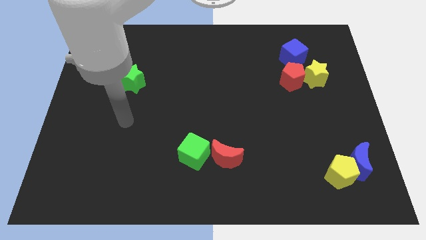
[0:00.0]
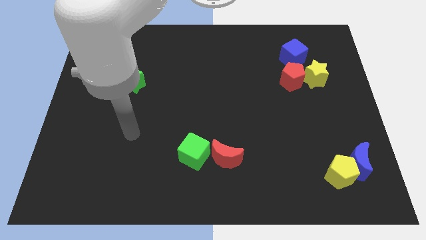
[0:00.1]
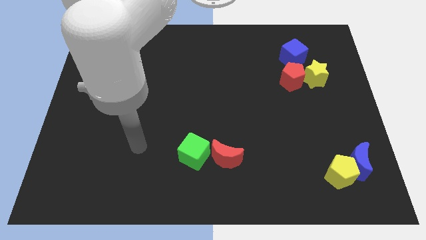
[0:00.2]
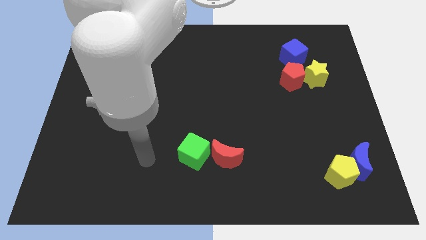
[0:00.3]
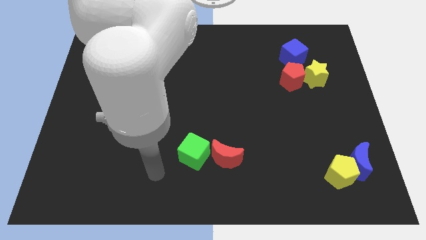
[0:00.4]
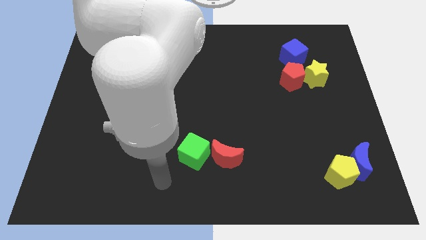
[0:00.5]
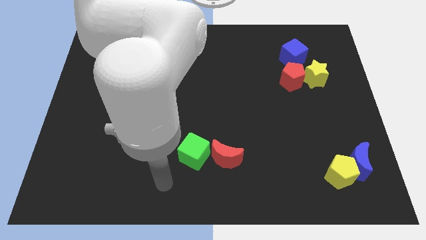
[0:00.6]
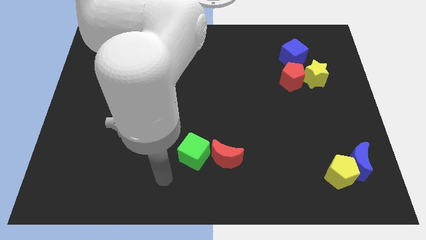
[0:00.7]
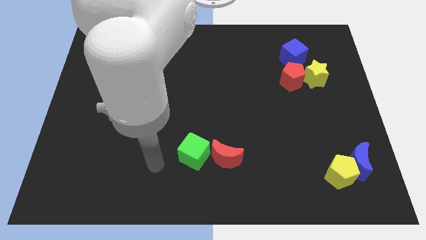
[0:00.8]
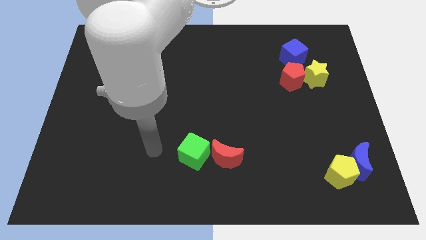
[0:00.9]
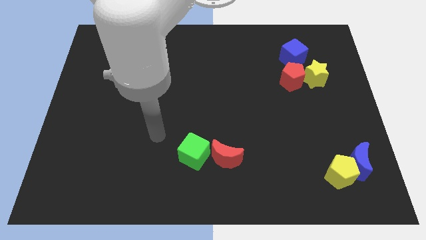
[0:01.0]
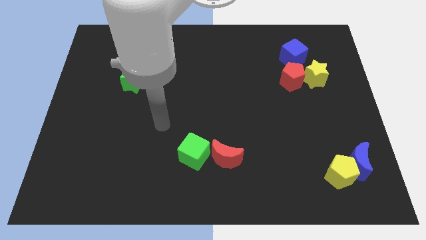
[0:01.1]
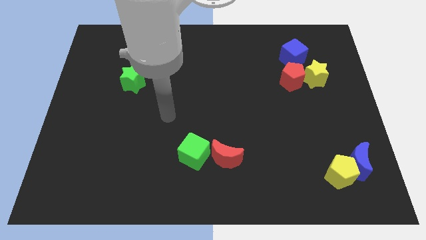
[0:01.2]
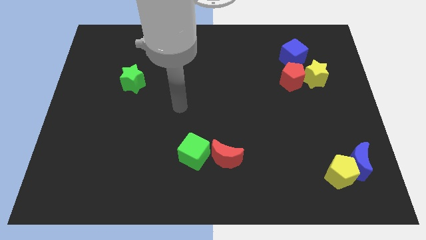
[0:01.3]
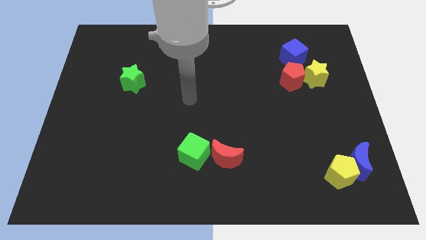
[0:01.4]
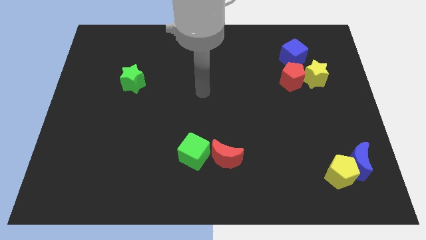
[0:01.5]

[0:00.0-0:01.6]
move your hand vertically above the green cube

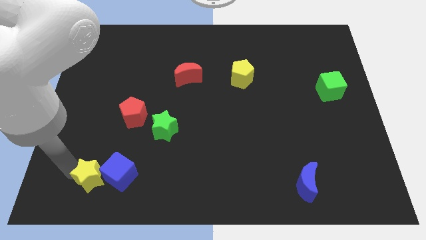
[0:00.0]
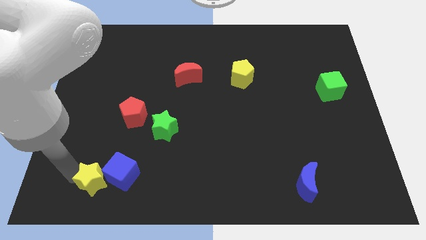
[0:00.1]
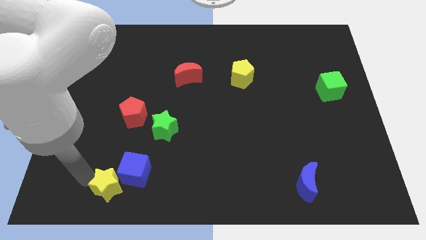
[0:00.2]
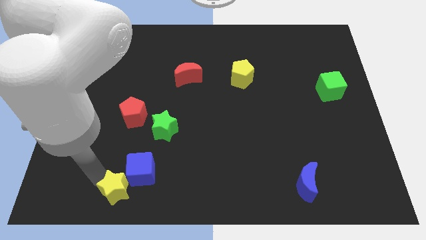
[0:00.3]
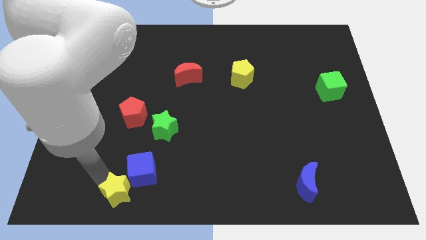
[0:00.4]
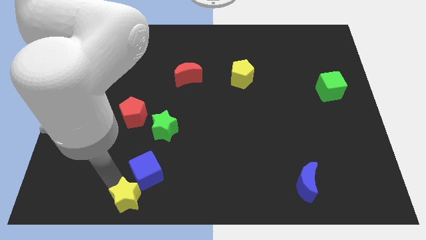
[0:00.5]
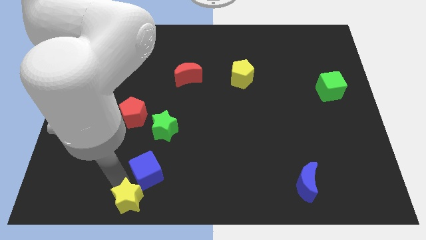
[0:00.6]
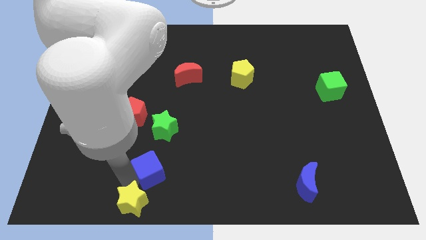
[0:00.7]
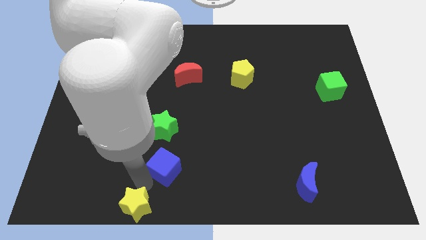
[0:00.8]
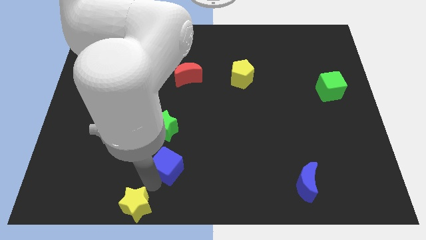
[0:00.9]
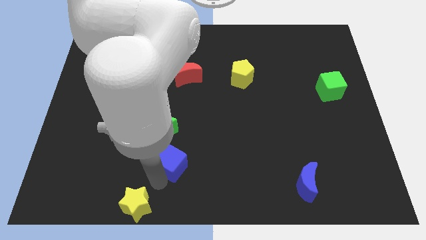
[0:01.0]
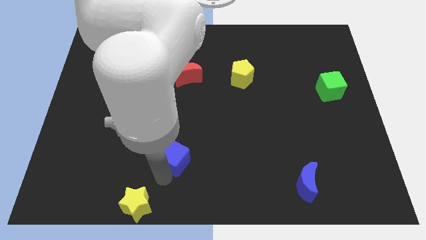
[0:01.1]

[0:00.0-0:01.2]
separate the blue cube from the yellow star

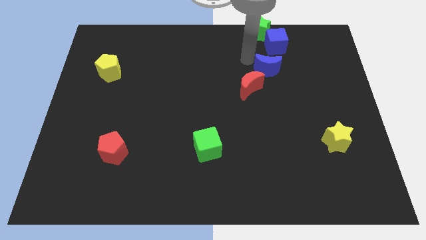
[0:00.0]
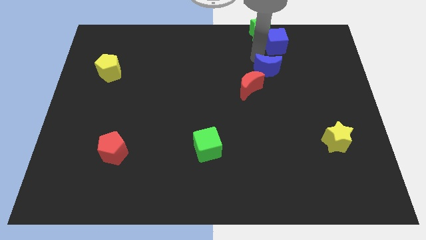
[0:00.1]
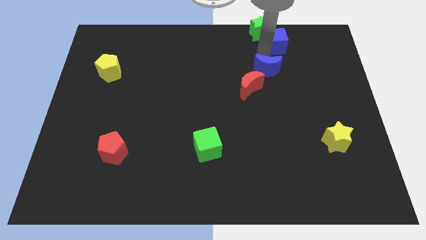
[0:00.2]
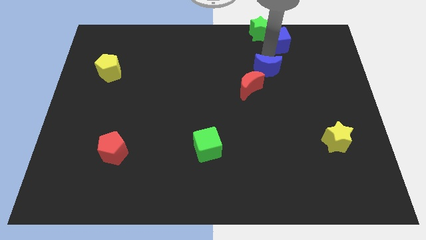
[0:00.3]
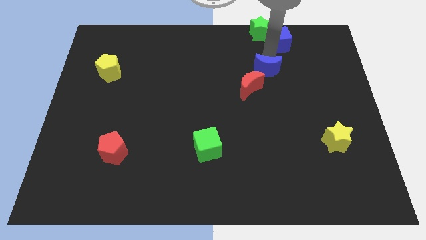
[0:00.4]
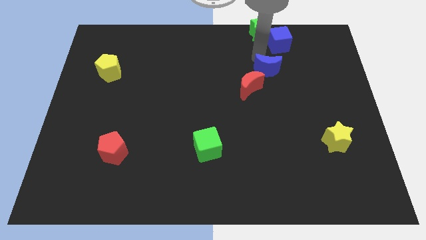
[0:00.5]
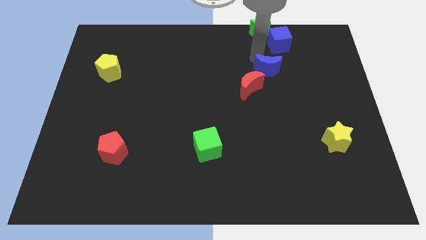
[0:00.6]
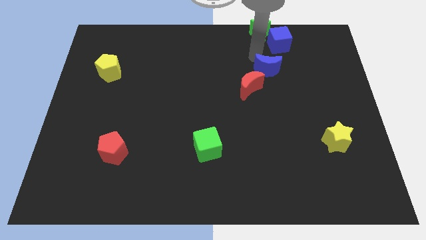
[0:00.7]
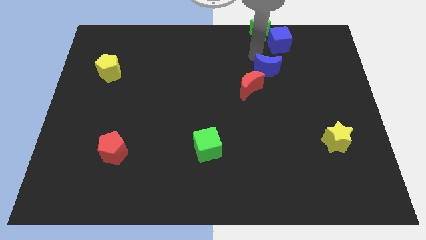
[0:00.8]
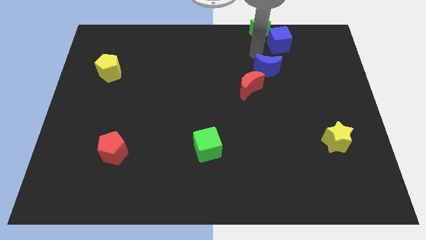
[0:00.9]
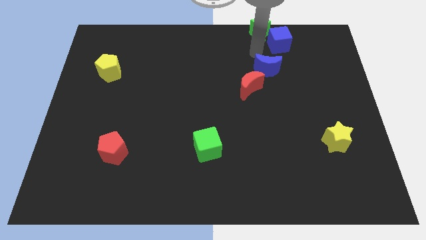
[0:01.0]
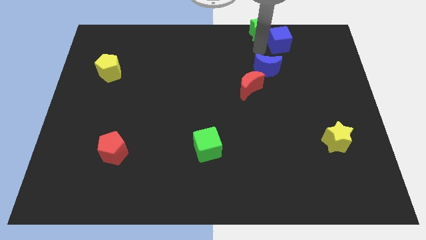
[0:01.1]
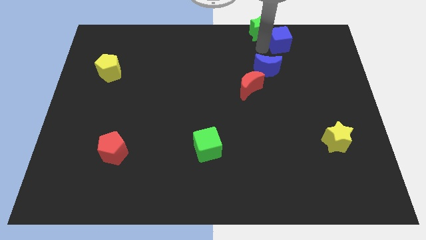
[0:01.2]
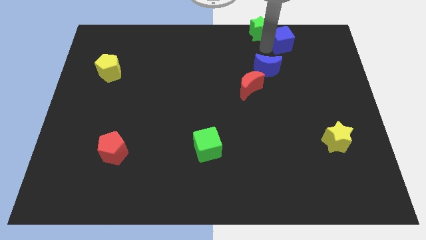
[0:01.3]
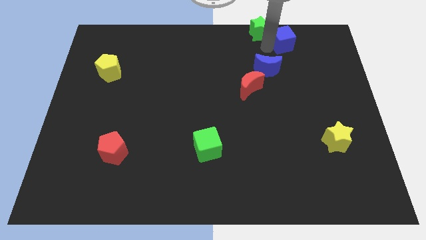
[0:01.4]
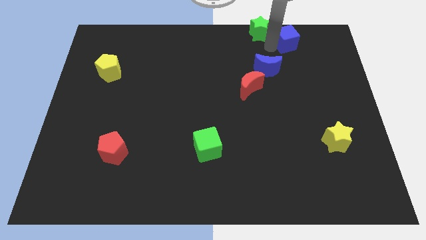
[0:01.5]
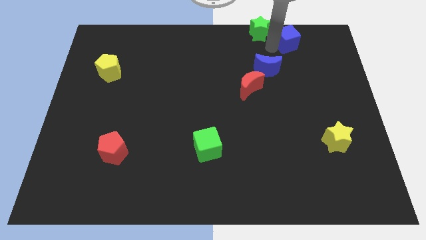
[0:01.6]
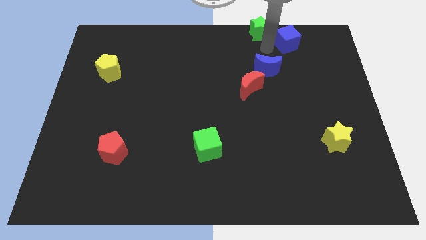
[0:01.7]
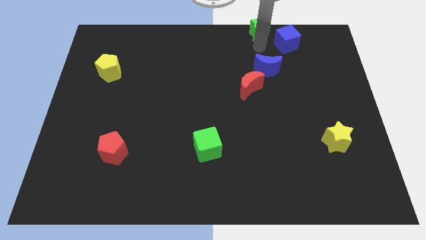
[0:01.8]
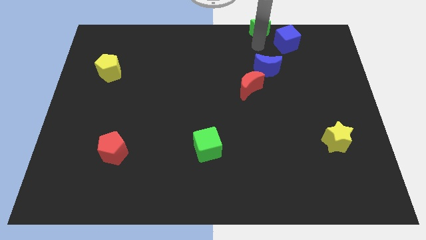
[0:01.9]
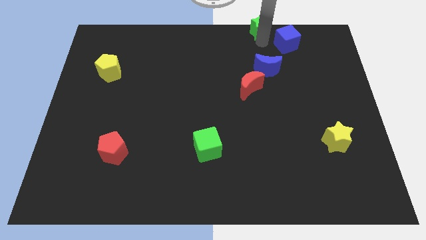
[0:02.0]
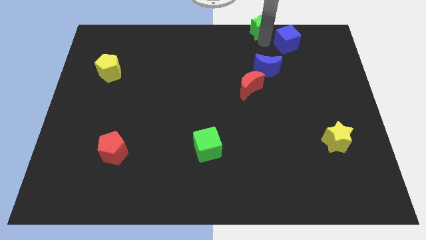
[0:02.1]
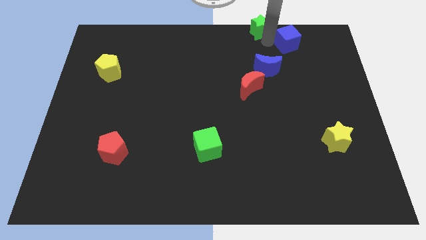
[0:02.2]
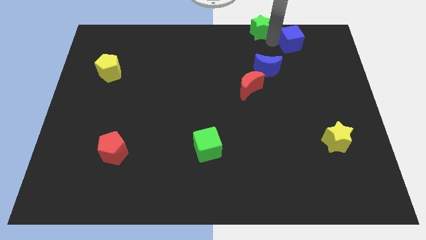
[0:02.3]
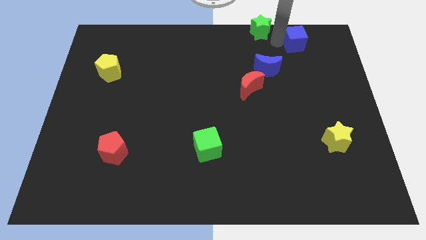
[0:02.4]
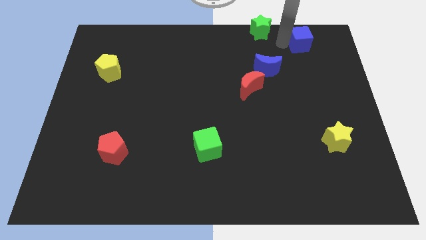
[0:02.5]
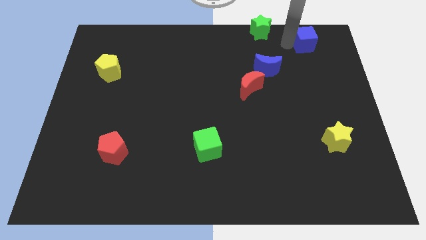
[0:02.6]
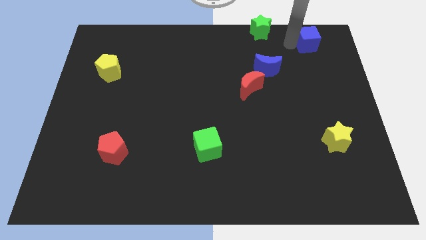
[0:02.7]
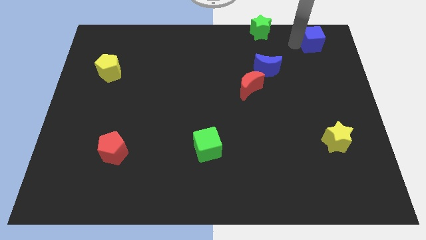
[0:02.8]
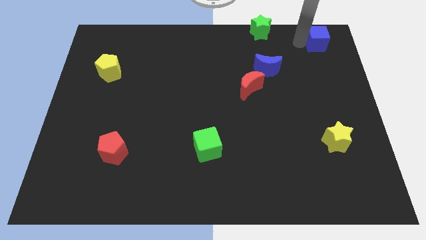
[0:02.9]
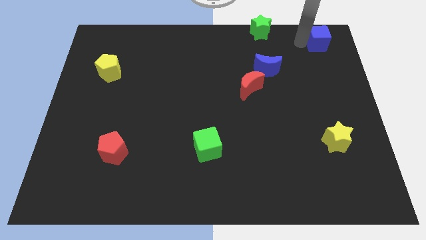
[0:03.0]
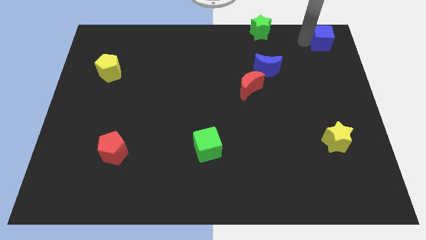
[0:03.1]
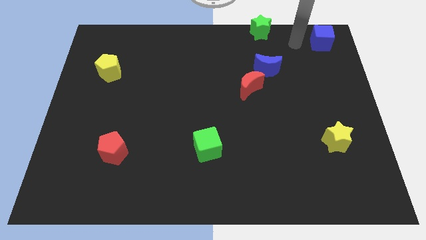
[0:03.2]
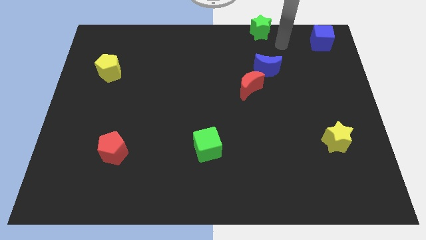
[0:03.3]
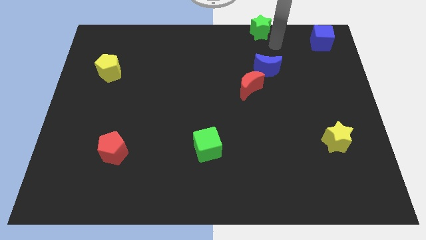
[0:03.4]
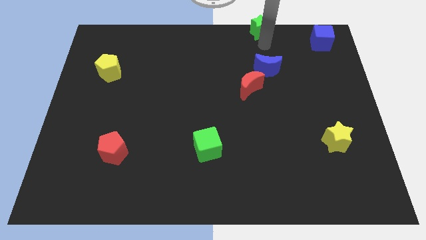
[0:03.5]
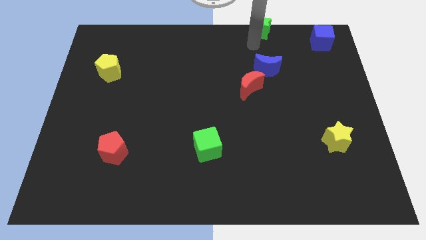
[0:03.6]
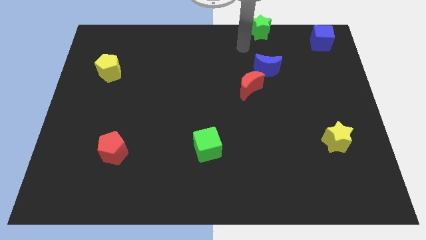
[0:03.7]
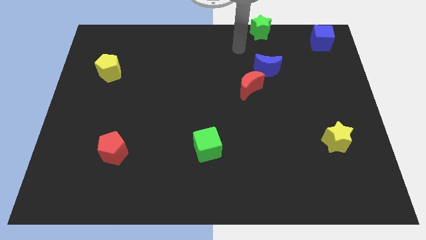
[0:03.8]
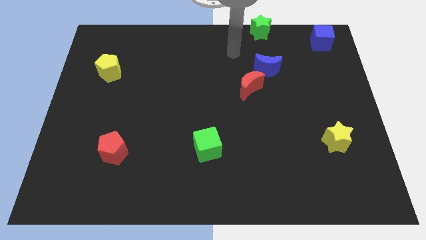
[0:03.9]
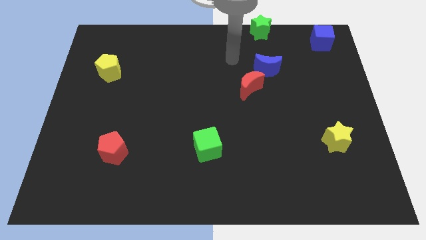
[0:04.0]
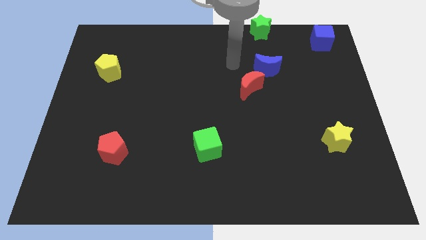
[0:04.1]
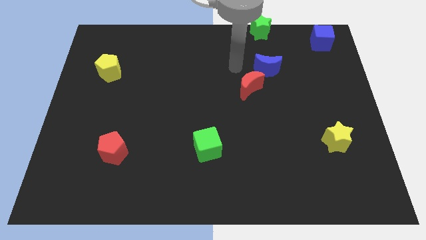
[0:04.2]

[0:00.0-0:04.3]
move the blue cube towards the top right corner of the board

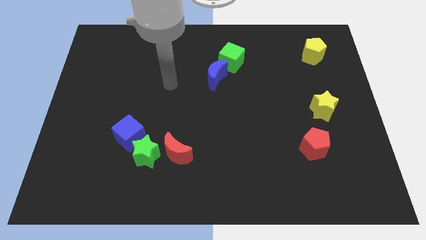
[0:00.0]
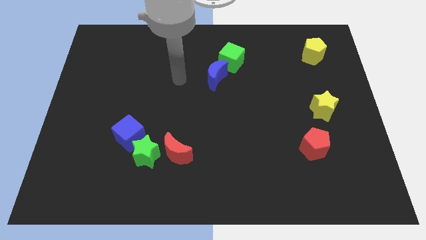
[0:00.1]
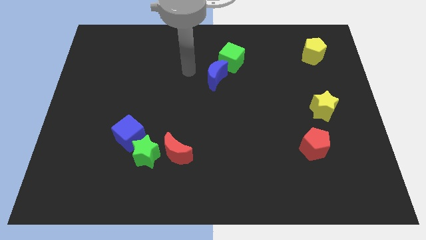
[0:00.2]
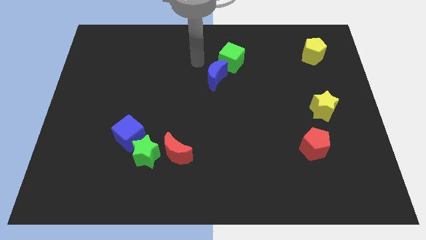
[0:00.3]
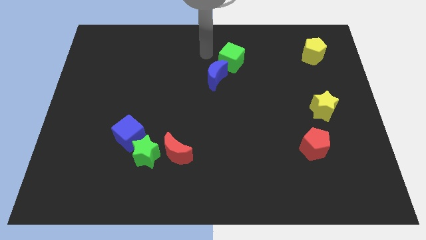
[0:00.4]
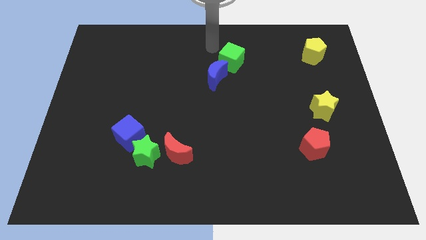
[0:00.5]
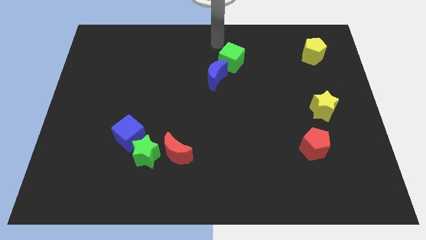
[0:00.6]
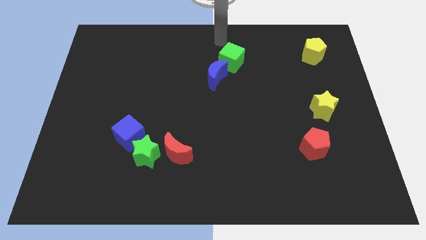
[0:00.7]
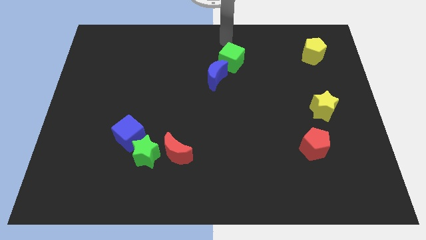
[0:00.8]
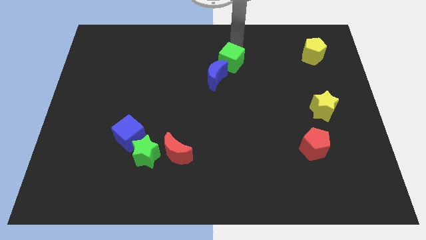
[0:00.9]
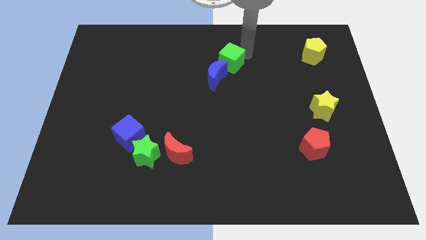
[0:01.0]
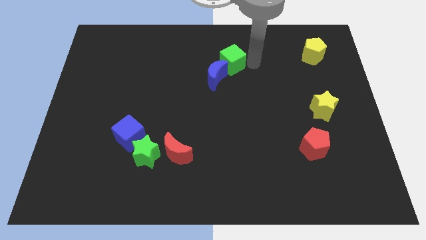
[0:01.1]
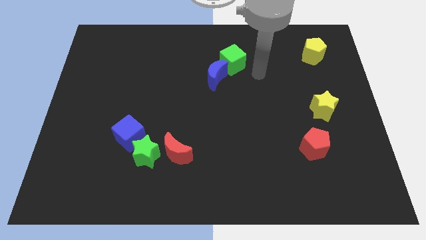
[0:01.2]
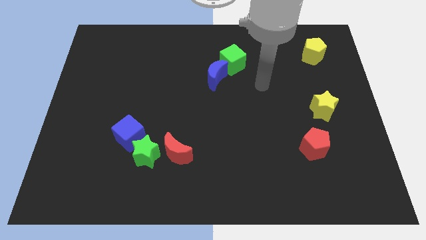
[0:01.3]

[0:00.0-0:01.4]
go and slightly push the green cube downwards

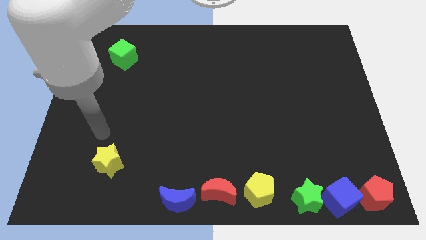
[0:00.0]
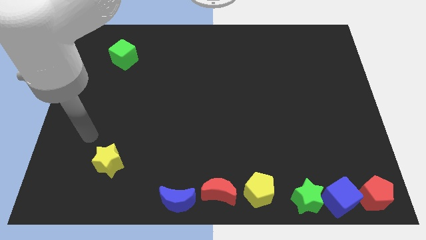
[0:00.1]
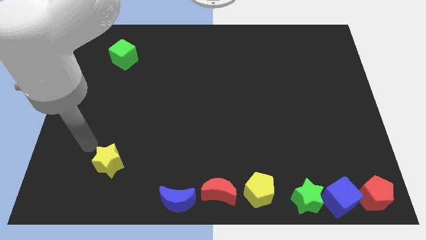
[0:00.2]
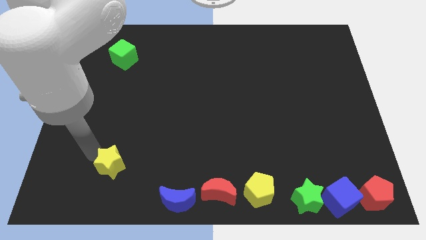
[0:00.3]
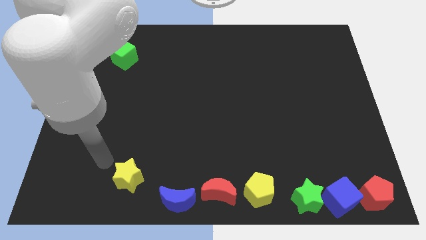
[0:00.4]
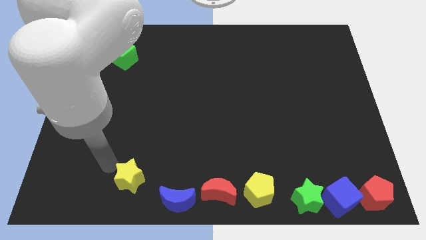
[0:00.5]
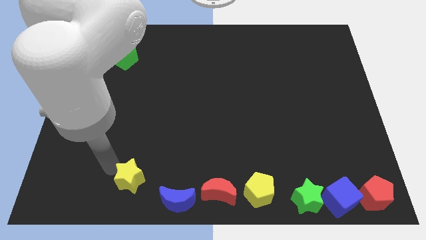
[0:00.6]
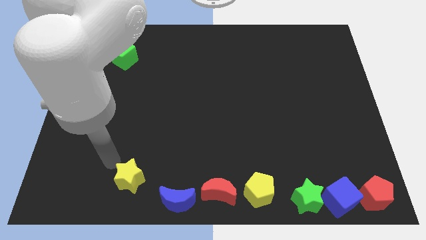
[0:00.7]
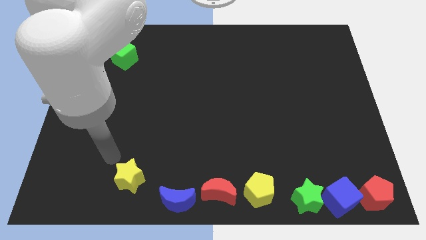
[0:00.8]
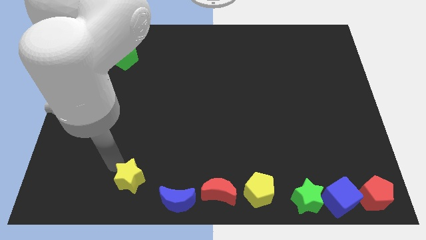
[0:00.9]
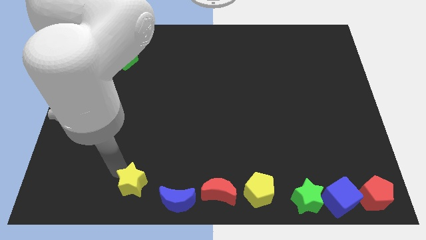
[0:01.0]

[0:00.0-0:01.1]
move the yellow star diagonally to the top left side of the blue moon
